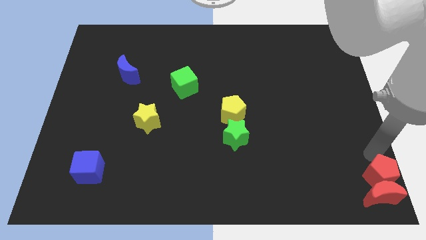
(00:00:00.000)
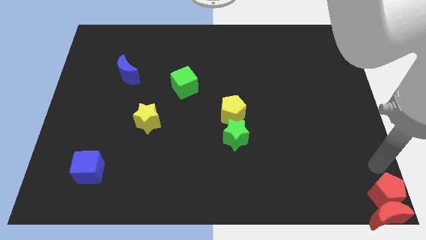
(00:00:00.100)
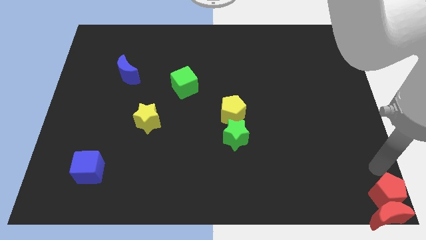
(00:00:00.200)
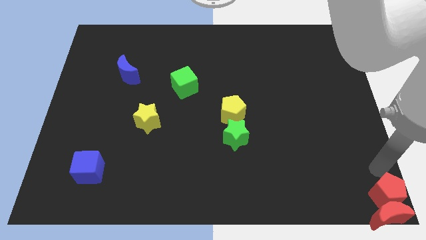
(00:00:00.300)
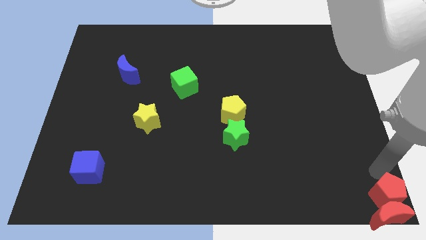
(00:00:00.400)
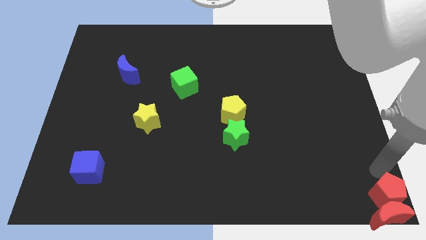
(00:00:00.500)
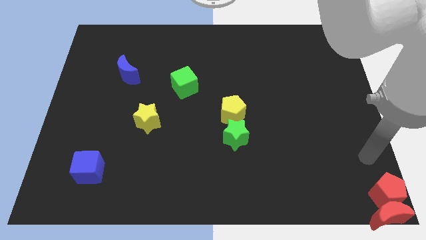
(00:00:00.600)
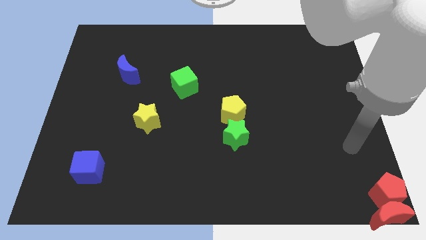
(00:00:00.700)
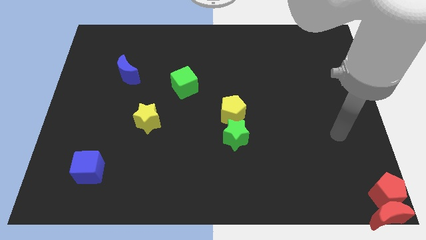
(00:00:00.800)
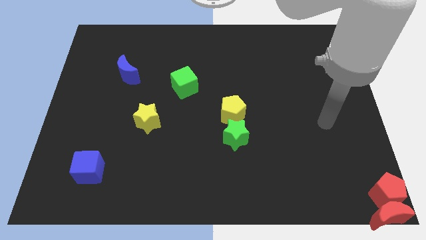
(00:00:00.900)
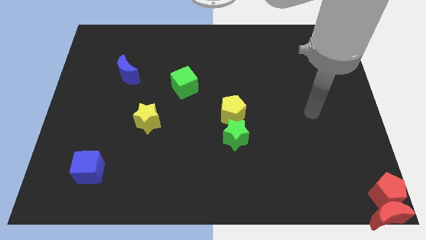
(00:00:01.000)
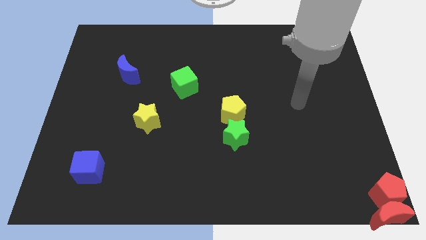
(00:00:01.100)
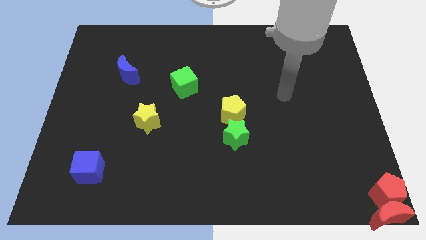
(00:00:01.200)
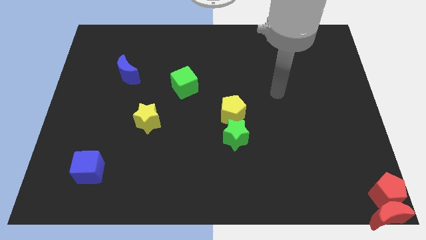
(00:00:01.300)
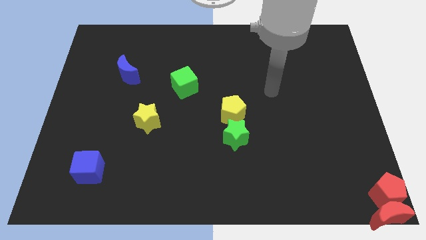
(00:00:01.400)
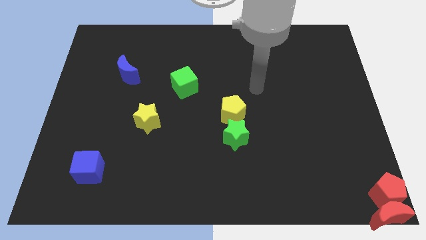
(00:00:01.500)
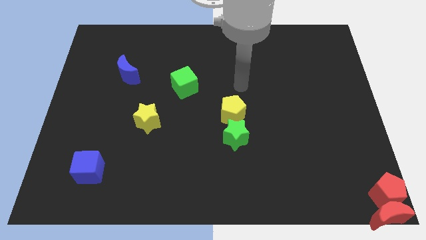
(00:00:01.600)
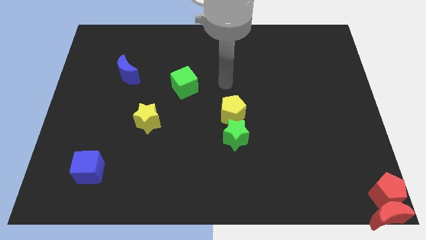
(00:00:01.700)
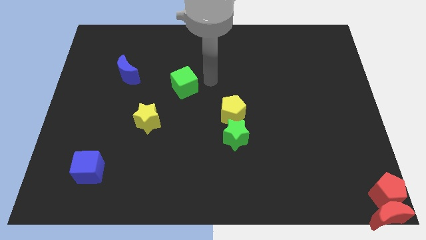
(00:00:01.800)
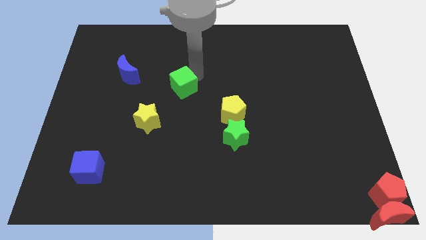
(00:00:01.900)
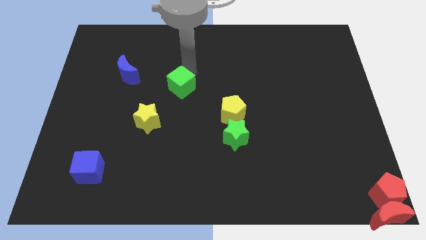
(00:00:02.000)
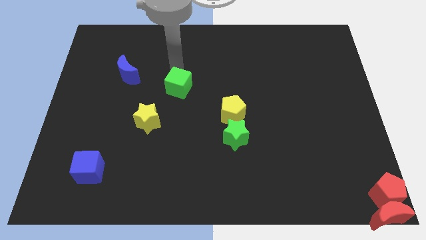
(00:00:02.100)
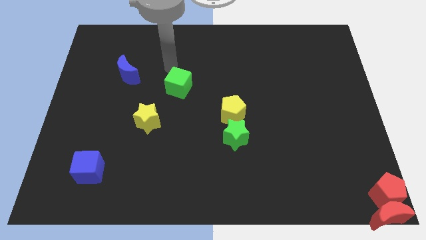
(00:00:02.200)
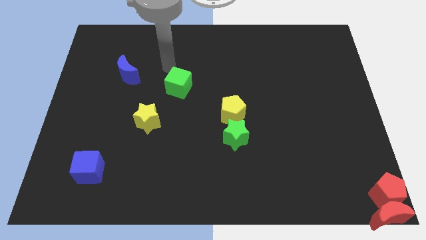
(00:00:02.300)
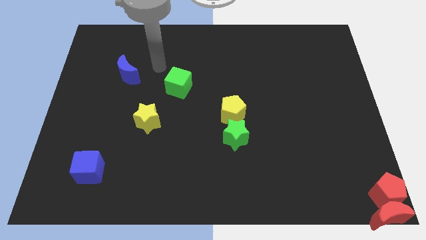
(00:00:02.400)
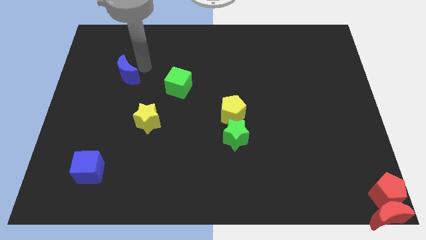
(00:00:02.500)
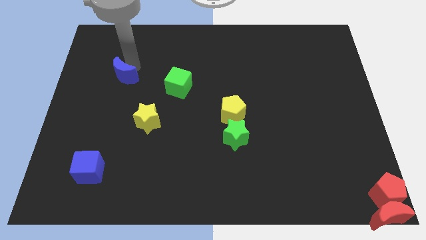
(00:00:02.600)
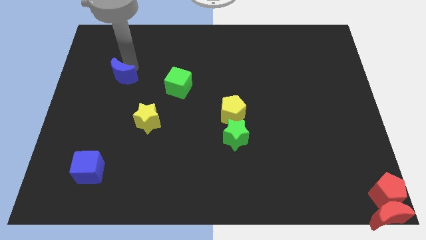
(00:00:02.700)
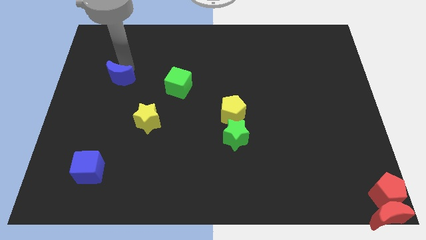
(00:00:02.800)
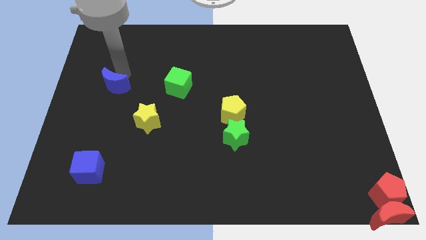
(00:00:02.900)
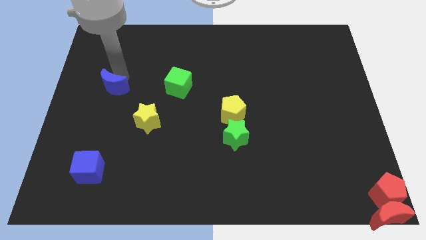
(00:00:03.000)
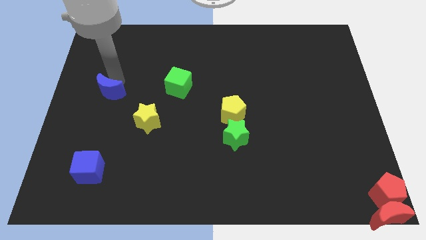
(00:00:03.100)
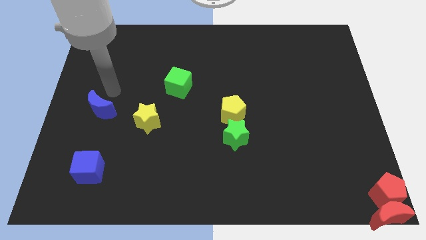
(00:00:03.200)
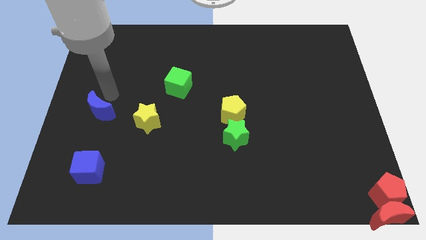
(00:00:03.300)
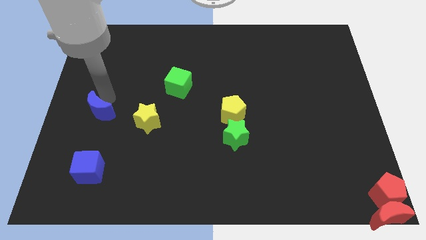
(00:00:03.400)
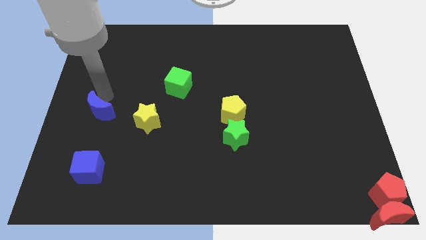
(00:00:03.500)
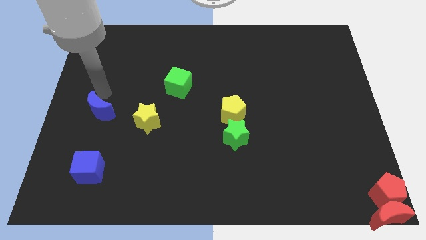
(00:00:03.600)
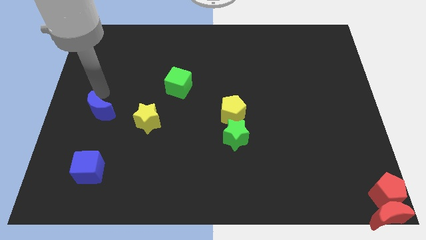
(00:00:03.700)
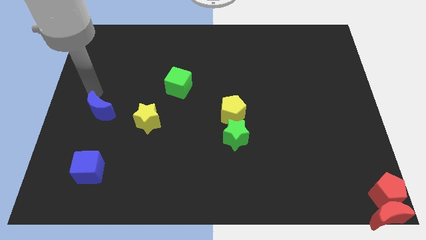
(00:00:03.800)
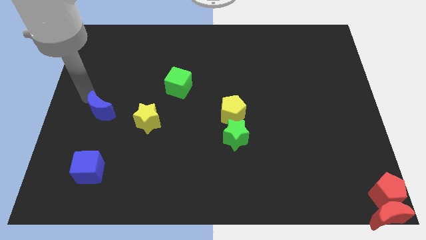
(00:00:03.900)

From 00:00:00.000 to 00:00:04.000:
move the blue crescent parallel to the top of the blue cube

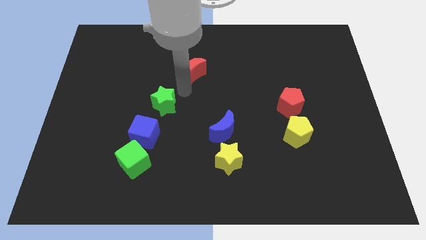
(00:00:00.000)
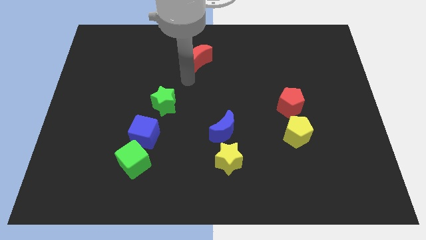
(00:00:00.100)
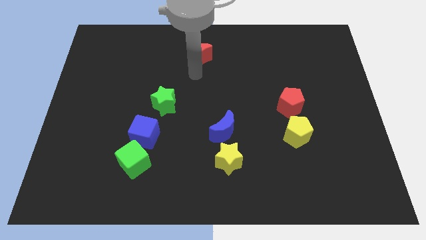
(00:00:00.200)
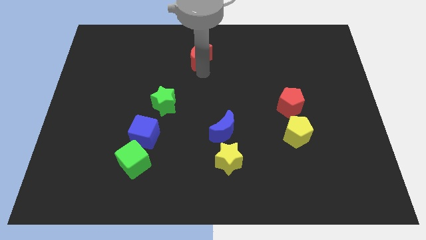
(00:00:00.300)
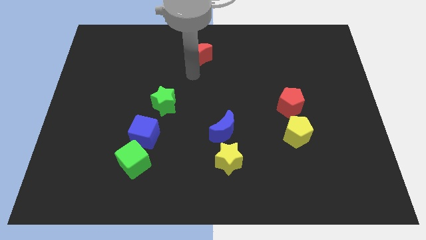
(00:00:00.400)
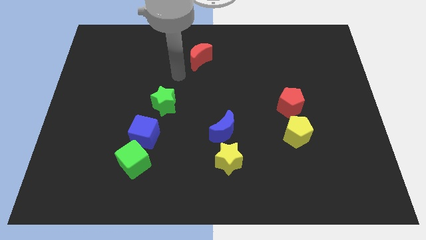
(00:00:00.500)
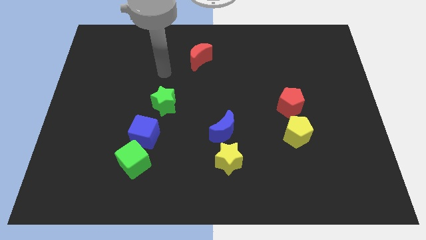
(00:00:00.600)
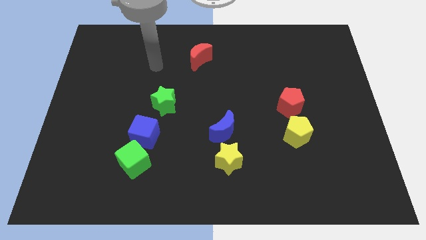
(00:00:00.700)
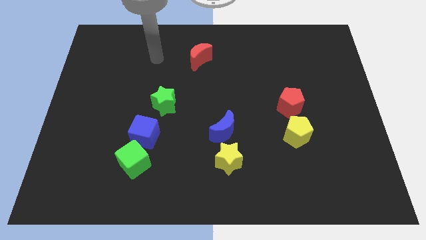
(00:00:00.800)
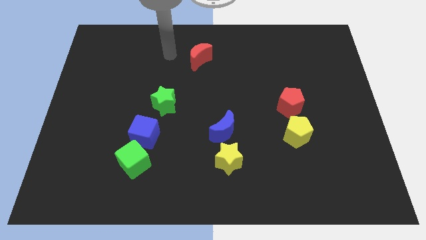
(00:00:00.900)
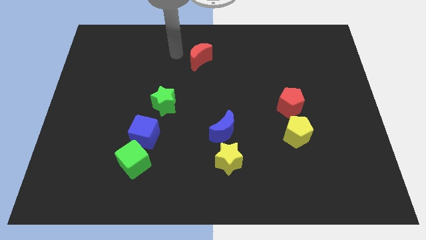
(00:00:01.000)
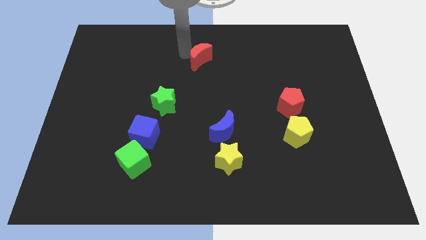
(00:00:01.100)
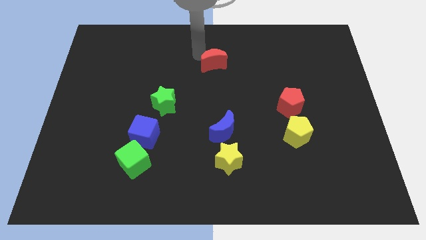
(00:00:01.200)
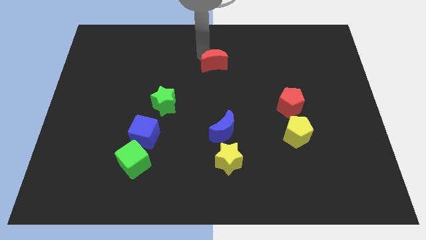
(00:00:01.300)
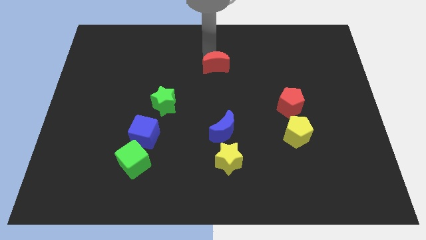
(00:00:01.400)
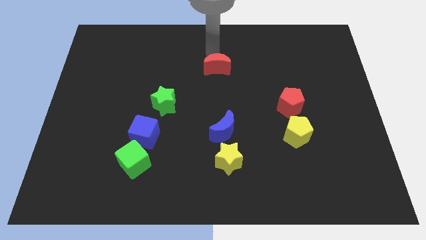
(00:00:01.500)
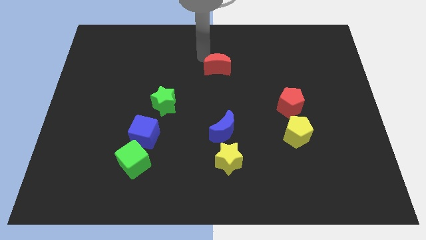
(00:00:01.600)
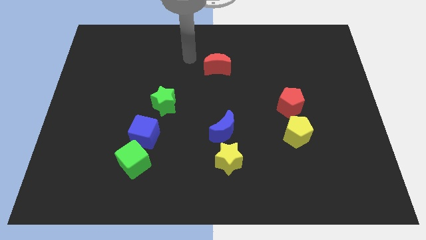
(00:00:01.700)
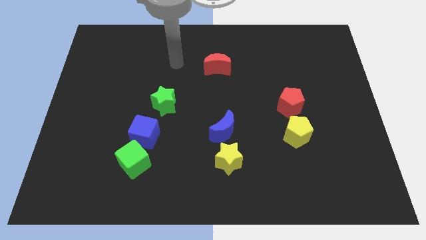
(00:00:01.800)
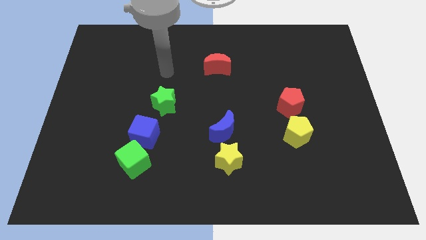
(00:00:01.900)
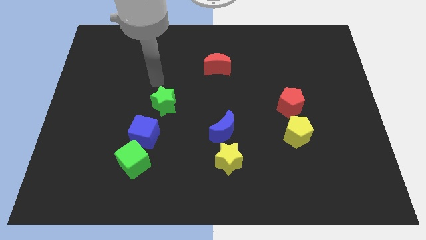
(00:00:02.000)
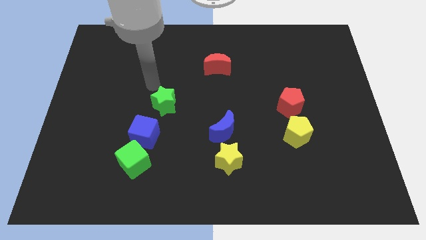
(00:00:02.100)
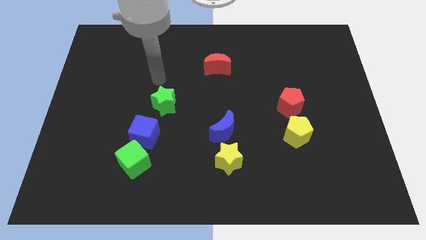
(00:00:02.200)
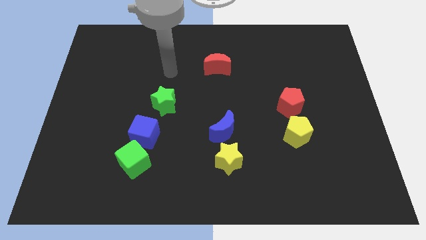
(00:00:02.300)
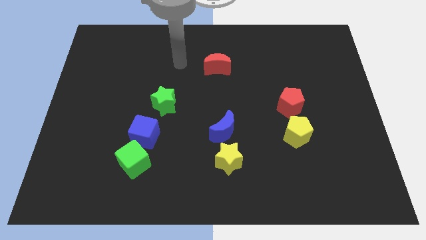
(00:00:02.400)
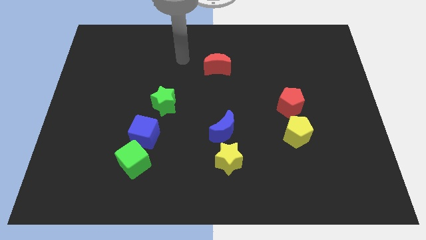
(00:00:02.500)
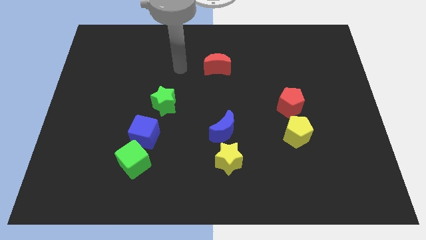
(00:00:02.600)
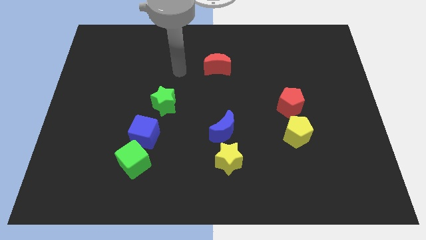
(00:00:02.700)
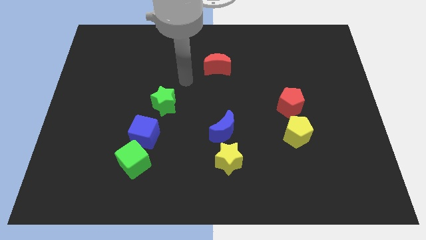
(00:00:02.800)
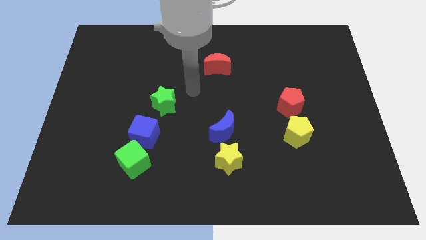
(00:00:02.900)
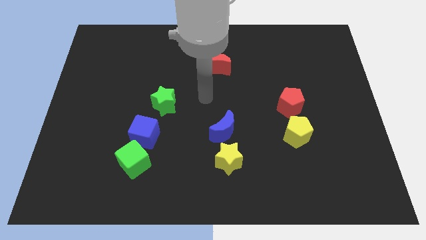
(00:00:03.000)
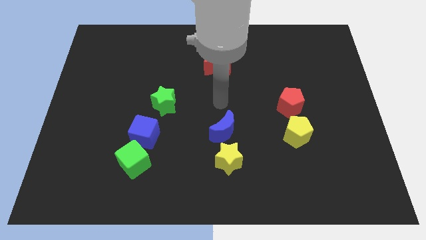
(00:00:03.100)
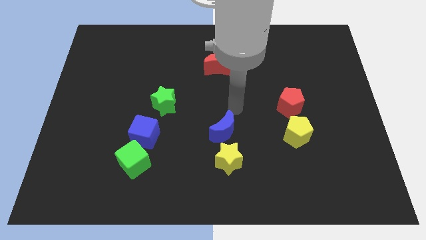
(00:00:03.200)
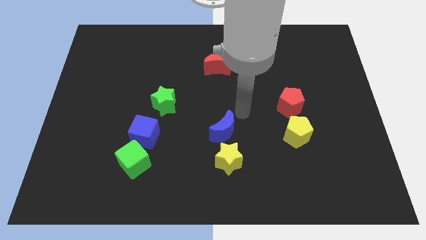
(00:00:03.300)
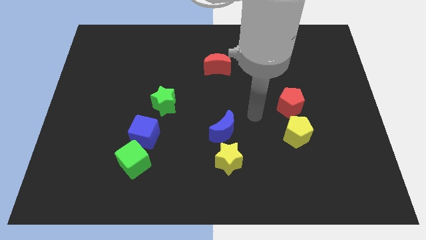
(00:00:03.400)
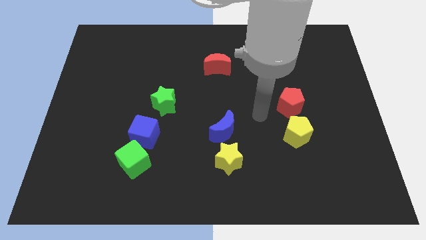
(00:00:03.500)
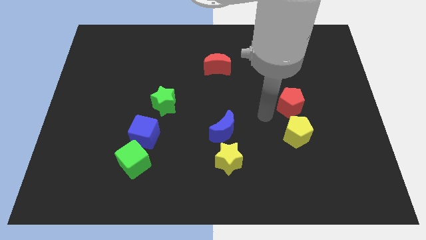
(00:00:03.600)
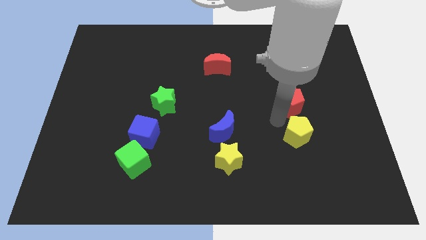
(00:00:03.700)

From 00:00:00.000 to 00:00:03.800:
move the red crescent to the top of the board

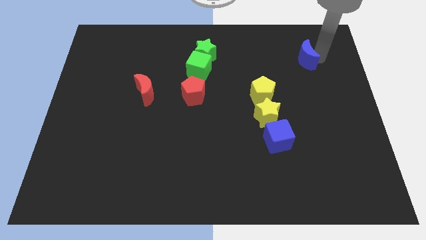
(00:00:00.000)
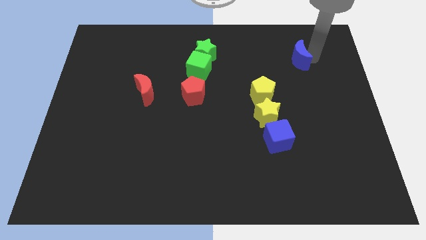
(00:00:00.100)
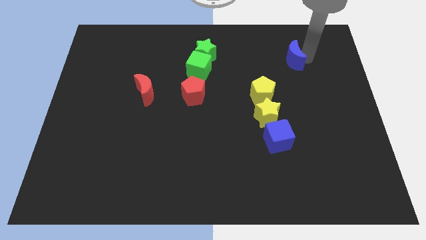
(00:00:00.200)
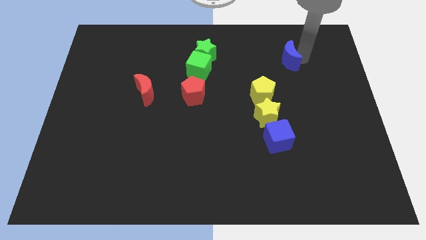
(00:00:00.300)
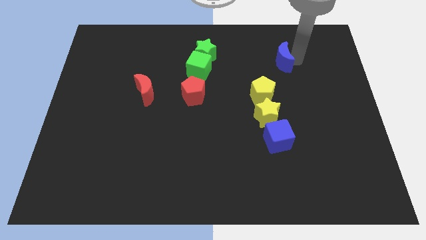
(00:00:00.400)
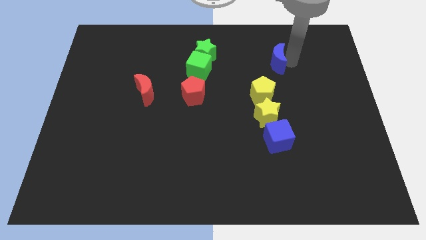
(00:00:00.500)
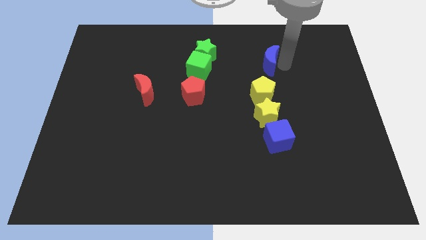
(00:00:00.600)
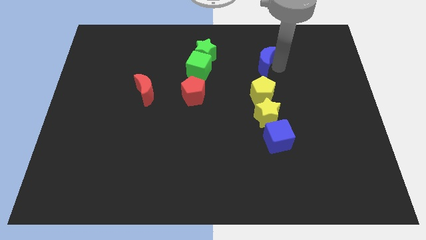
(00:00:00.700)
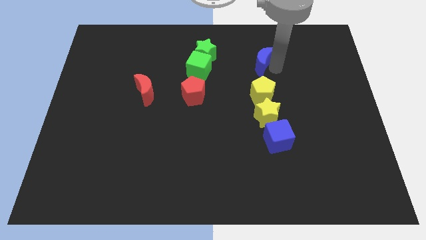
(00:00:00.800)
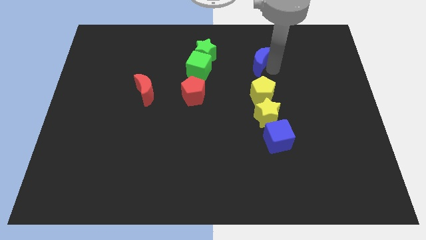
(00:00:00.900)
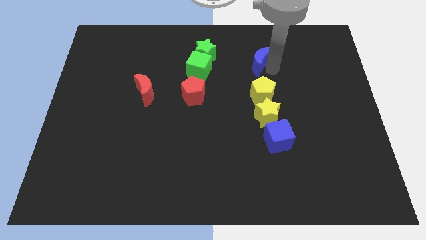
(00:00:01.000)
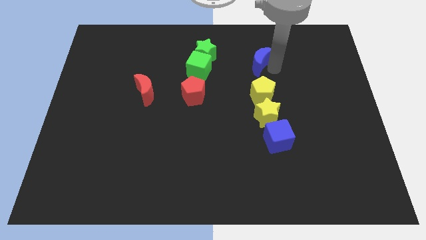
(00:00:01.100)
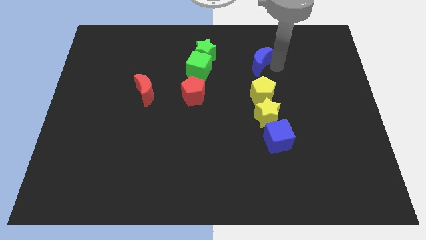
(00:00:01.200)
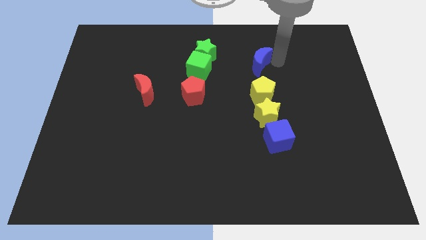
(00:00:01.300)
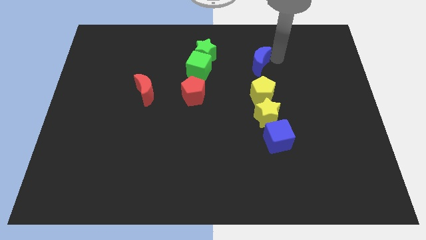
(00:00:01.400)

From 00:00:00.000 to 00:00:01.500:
move the blue moon above the yellow pentagon
